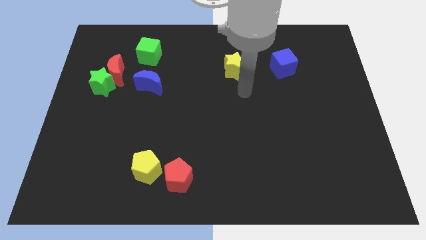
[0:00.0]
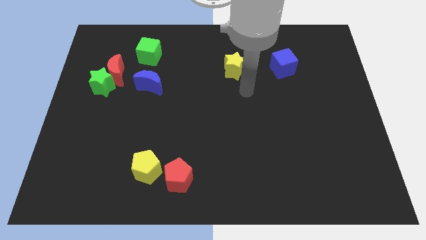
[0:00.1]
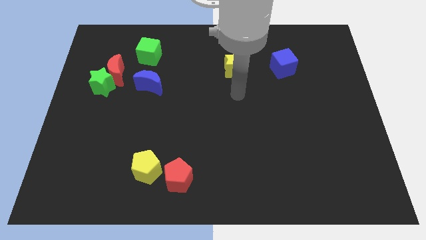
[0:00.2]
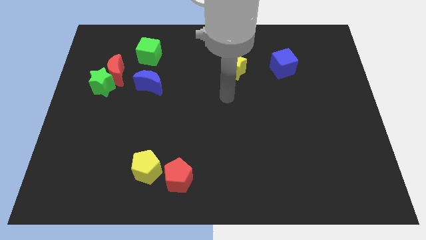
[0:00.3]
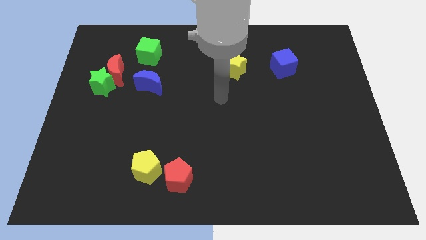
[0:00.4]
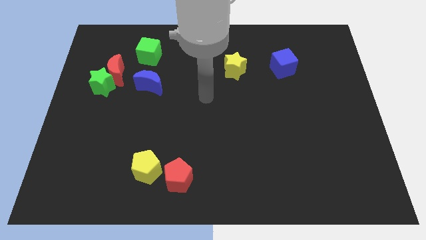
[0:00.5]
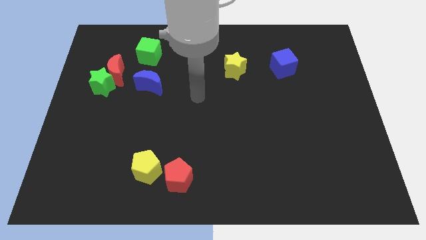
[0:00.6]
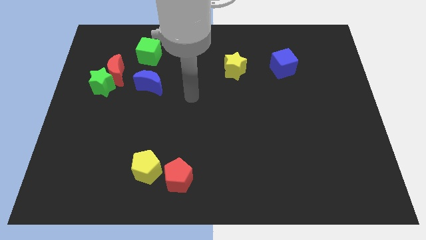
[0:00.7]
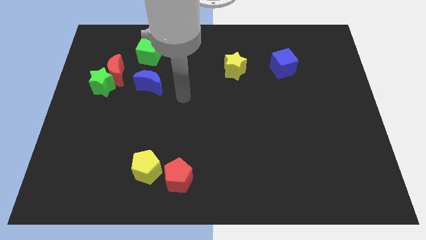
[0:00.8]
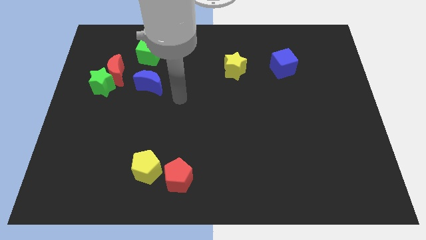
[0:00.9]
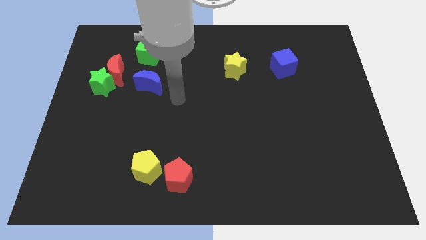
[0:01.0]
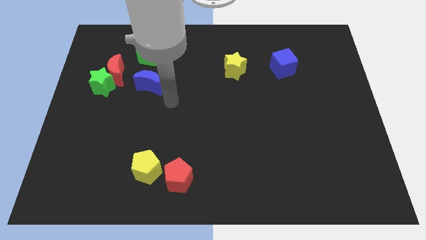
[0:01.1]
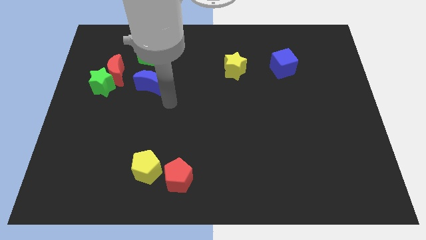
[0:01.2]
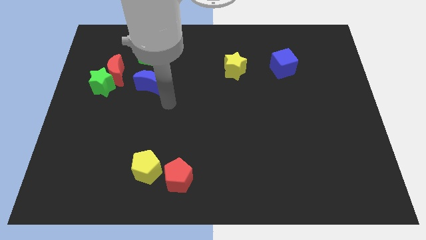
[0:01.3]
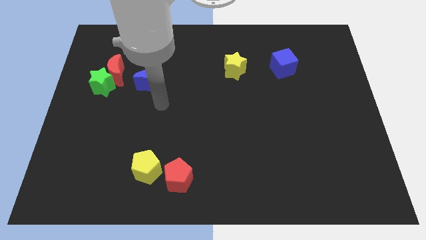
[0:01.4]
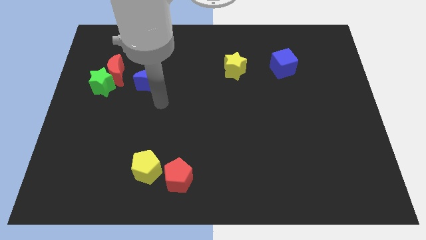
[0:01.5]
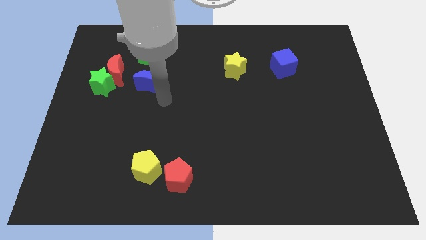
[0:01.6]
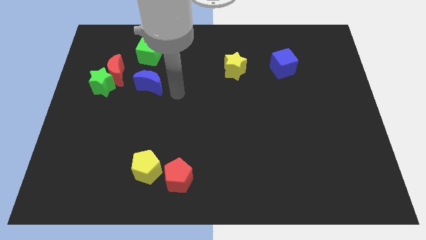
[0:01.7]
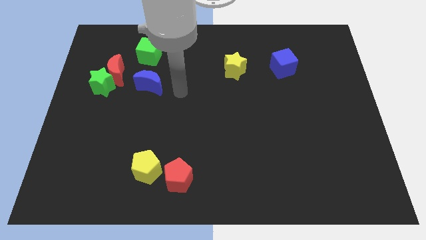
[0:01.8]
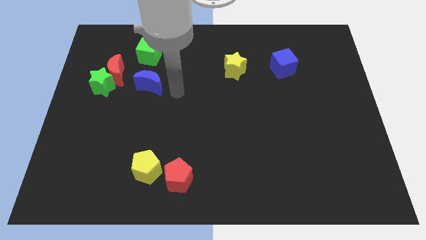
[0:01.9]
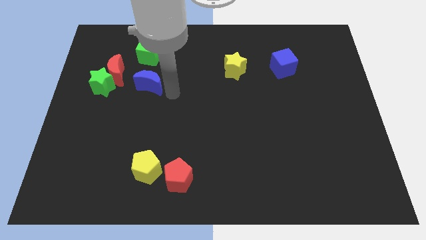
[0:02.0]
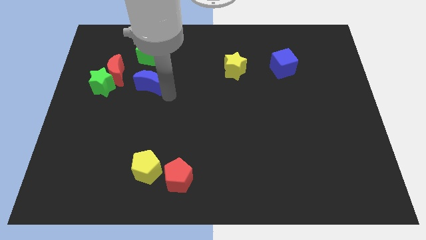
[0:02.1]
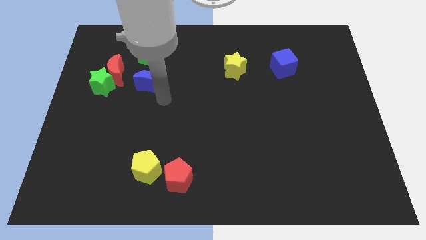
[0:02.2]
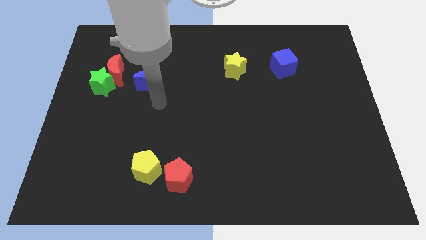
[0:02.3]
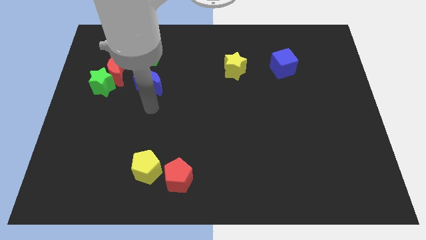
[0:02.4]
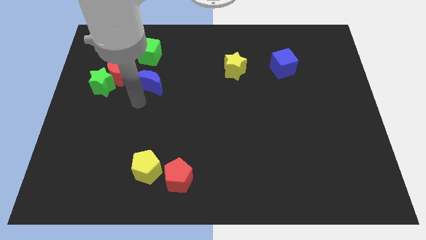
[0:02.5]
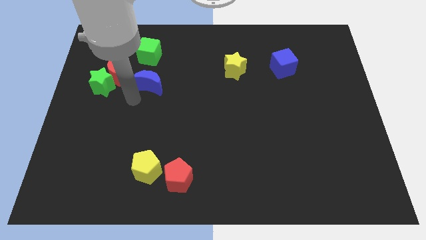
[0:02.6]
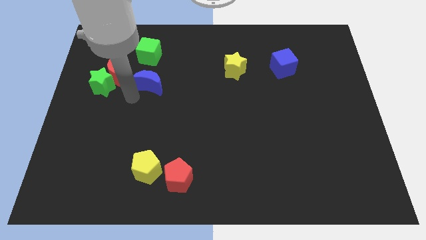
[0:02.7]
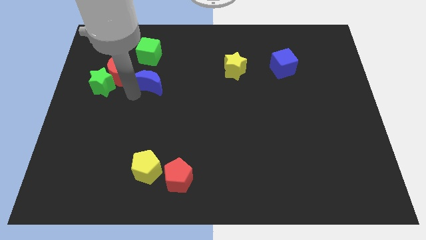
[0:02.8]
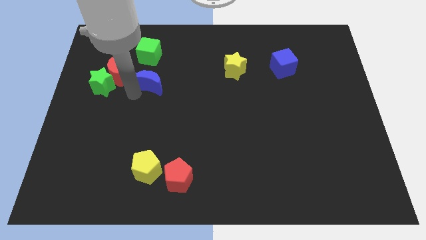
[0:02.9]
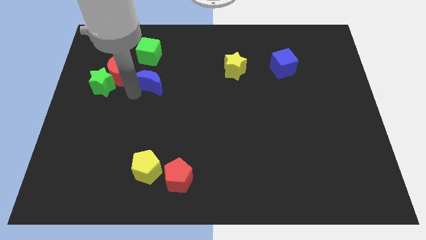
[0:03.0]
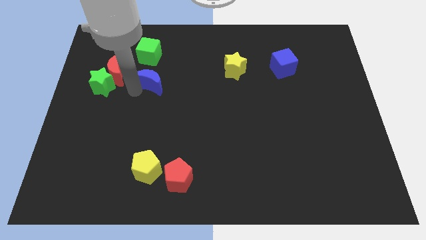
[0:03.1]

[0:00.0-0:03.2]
slightly push the blue crescent towards the top side of the board

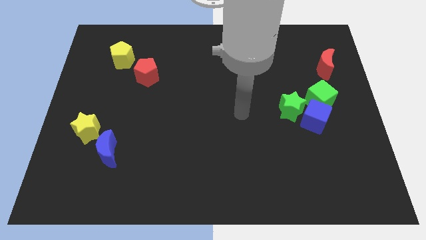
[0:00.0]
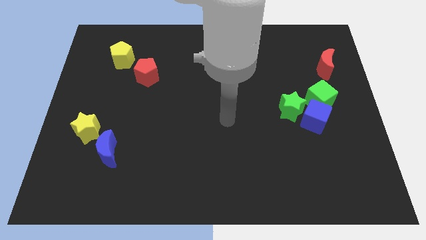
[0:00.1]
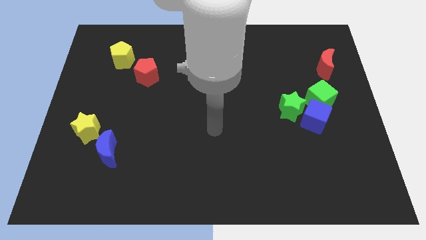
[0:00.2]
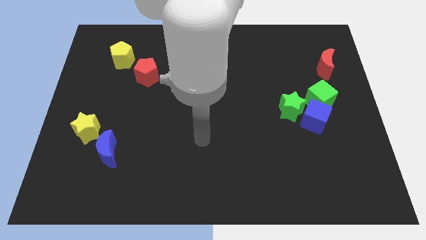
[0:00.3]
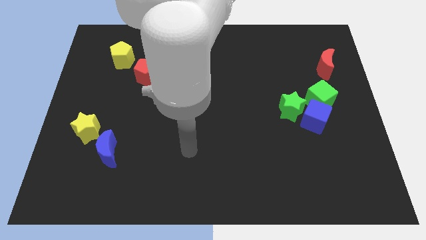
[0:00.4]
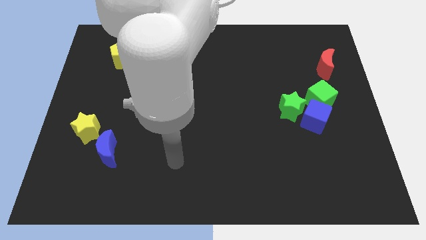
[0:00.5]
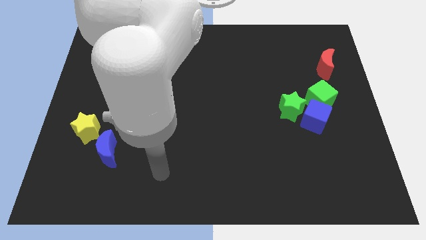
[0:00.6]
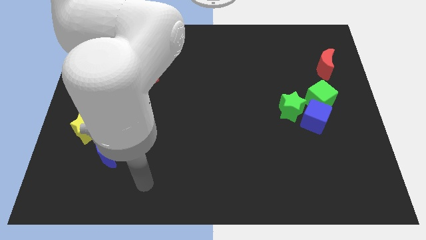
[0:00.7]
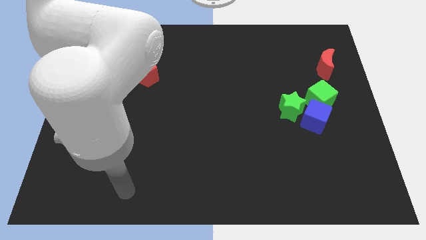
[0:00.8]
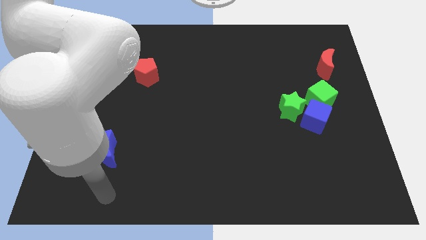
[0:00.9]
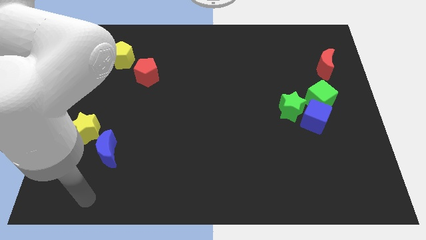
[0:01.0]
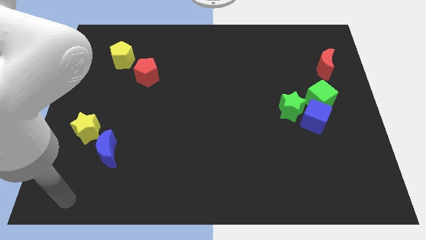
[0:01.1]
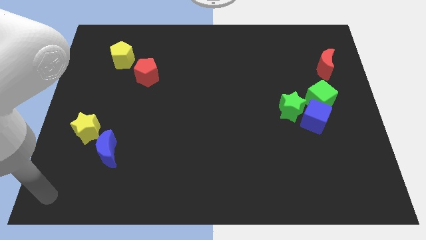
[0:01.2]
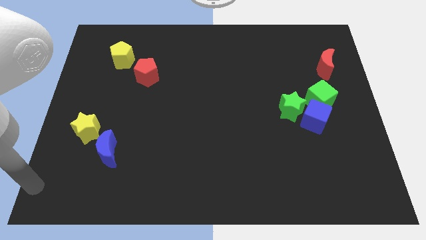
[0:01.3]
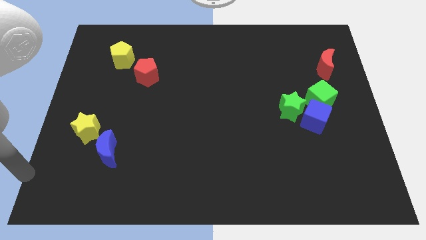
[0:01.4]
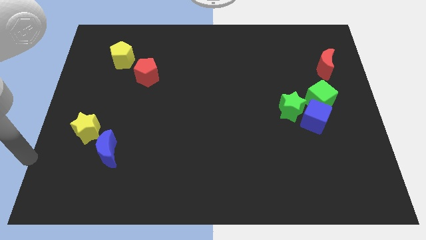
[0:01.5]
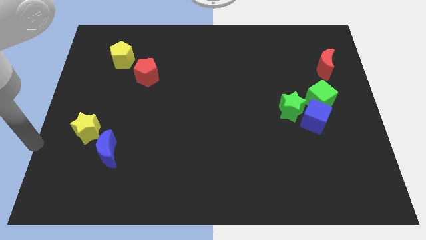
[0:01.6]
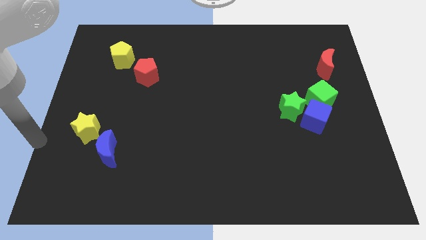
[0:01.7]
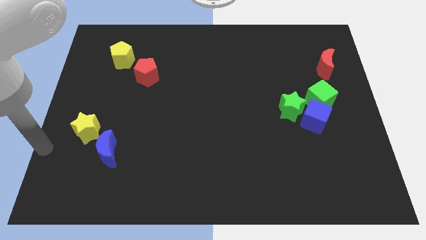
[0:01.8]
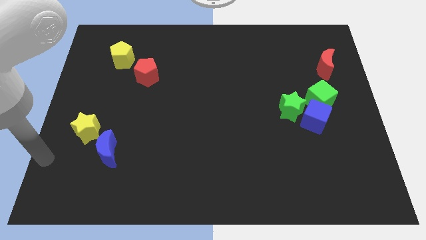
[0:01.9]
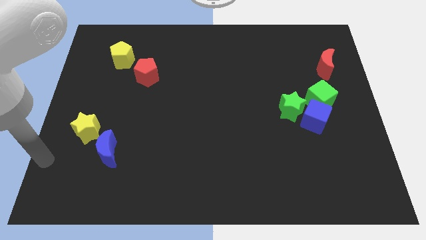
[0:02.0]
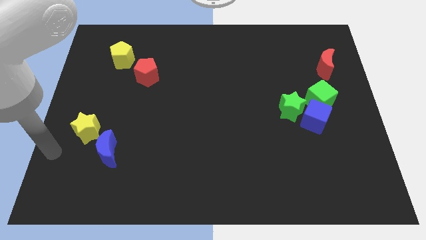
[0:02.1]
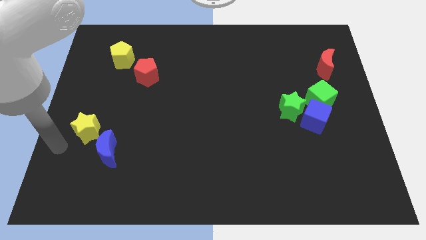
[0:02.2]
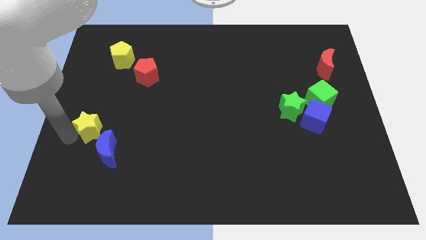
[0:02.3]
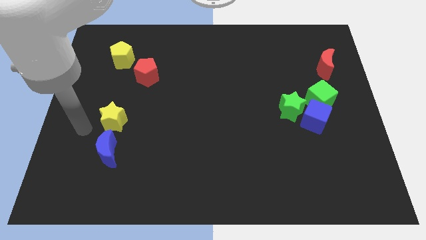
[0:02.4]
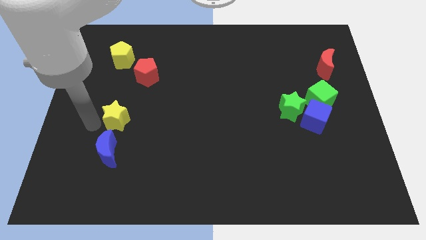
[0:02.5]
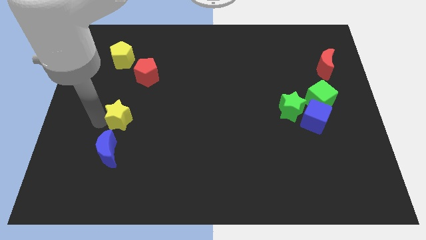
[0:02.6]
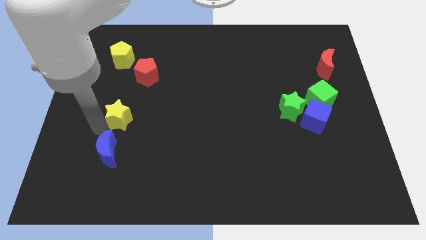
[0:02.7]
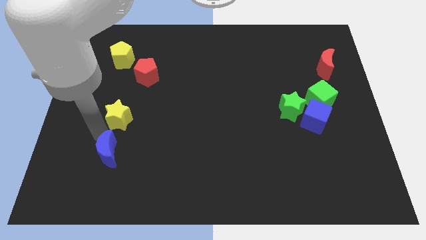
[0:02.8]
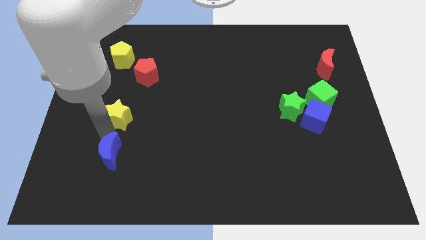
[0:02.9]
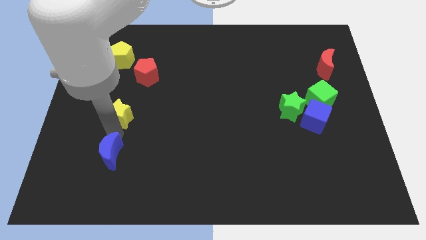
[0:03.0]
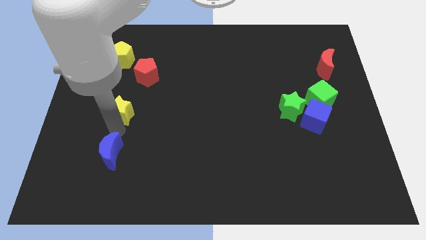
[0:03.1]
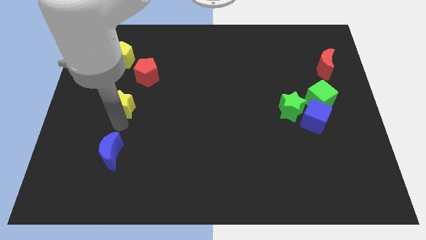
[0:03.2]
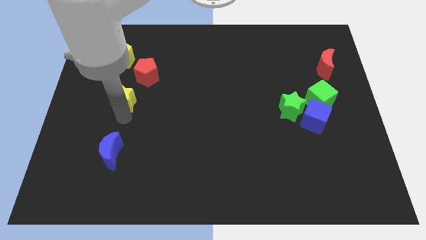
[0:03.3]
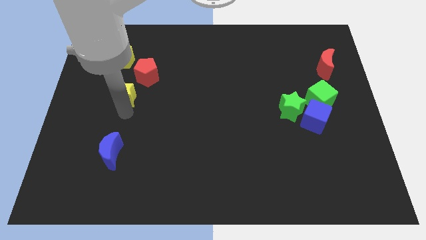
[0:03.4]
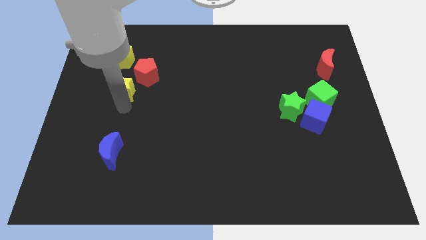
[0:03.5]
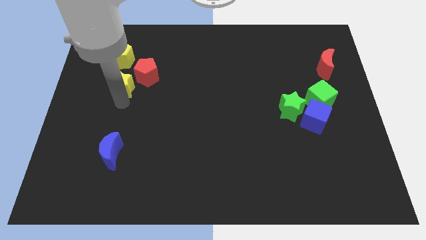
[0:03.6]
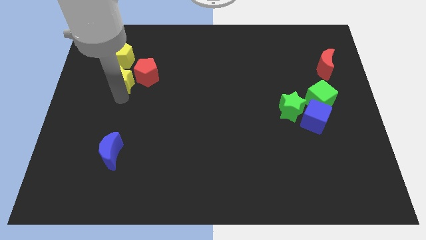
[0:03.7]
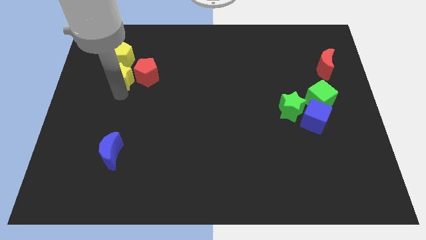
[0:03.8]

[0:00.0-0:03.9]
place the yellow star to the top of the blue moon

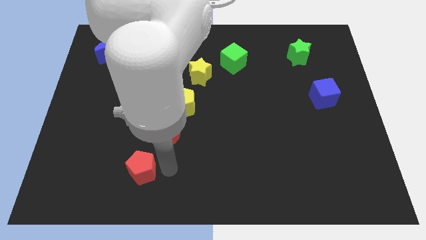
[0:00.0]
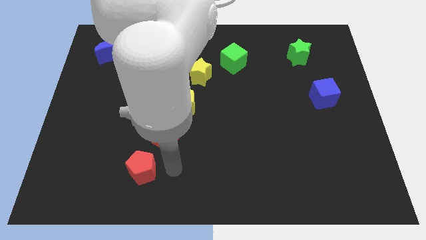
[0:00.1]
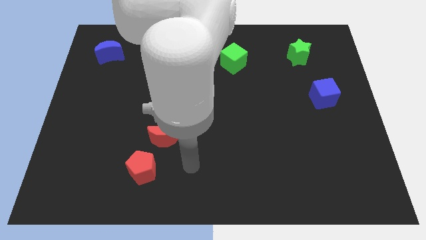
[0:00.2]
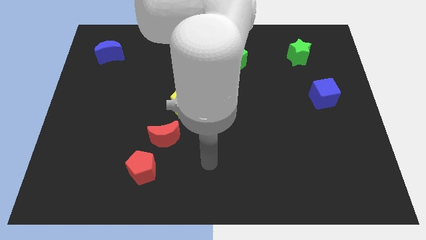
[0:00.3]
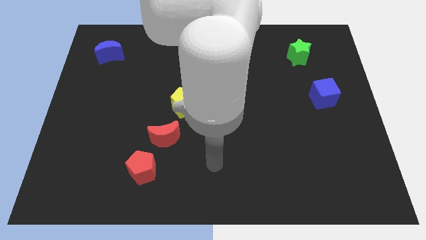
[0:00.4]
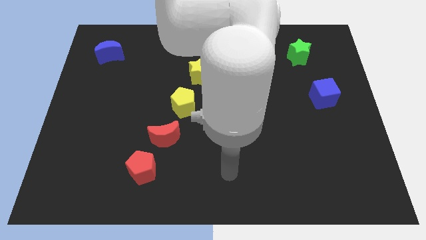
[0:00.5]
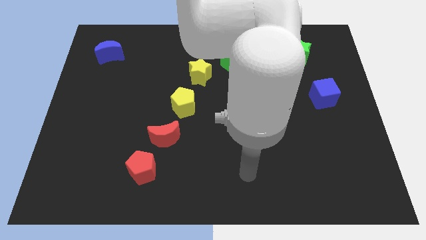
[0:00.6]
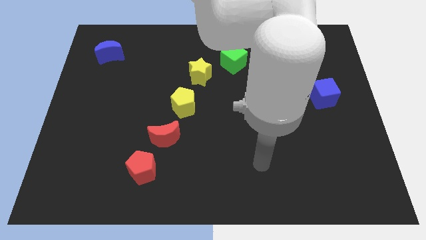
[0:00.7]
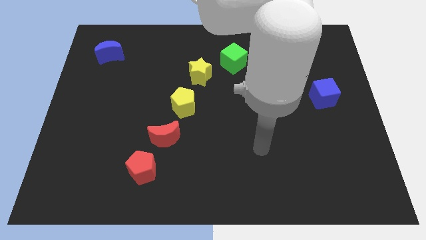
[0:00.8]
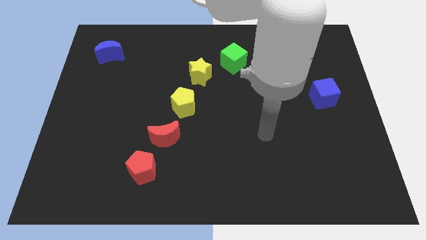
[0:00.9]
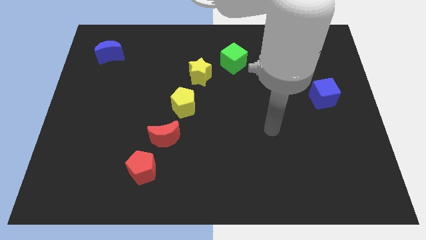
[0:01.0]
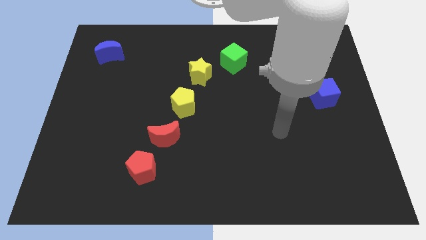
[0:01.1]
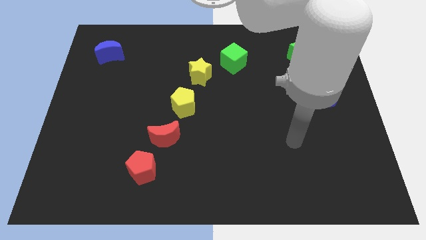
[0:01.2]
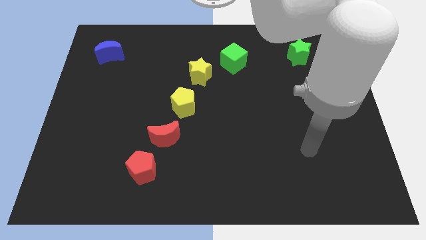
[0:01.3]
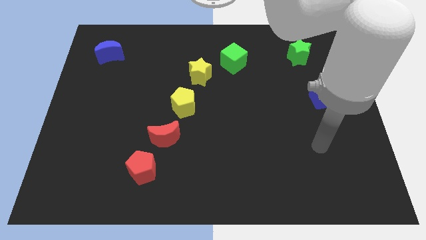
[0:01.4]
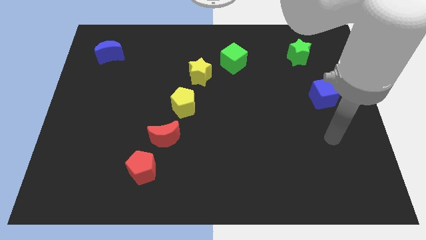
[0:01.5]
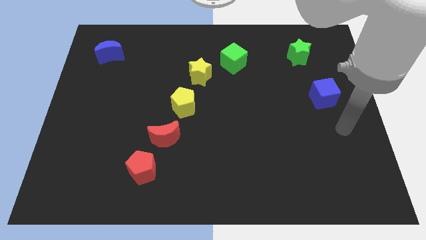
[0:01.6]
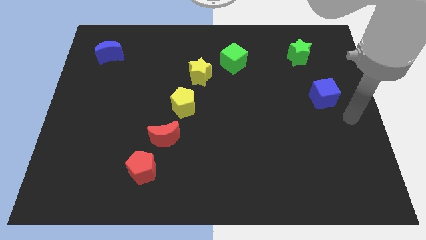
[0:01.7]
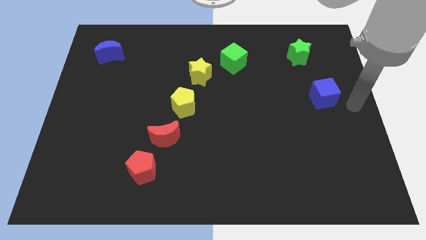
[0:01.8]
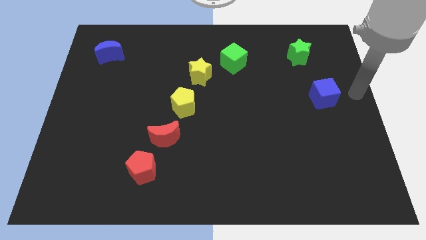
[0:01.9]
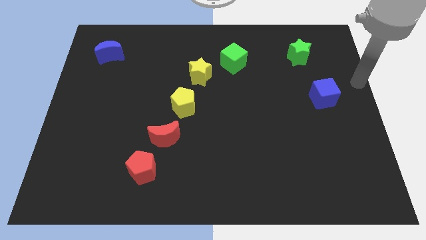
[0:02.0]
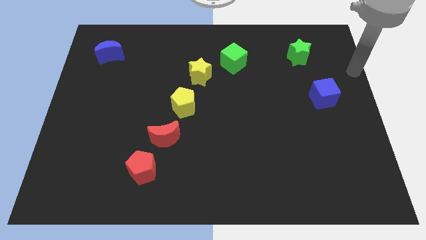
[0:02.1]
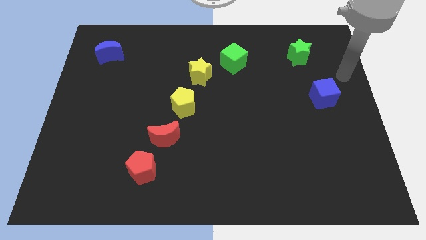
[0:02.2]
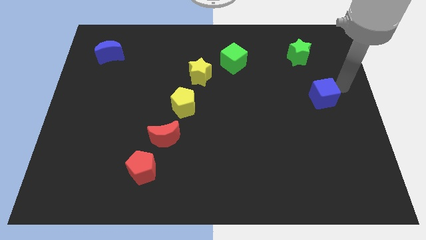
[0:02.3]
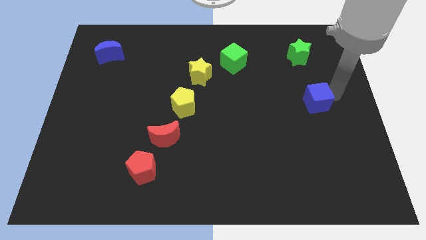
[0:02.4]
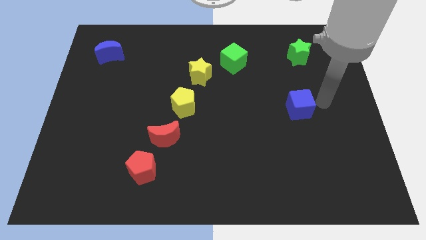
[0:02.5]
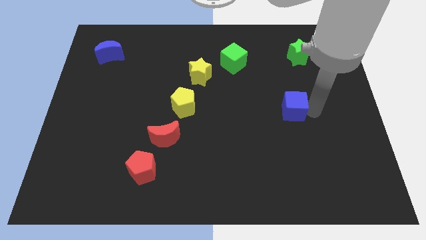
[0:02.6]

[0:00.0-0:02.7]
move the blue cube to the left of the yellow pentagon
